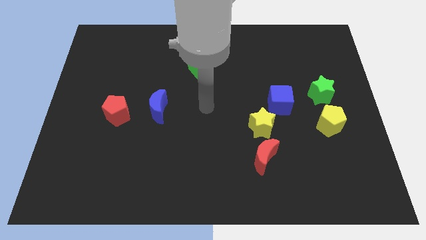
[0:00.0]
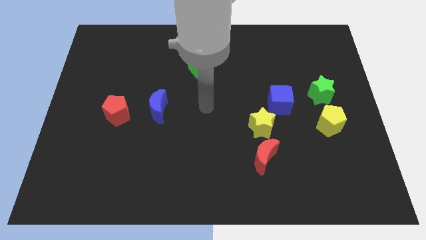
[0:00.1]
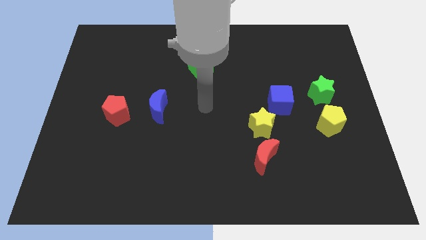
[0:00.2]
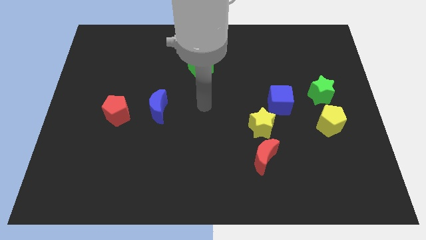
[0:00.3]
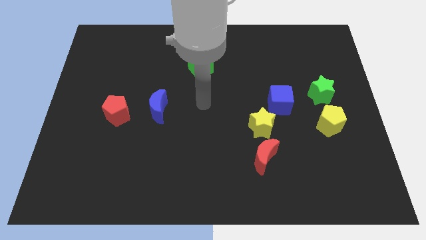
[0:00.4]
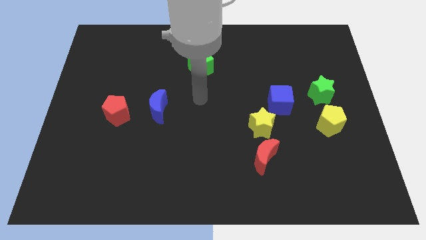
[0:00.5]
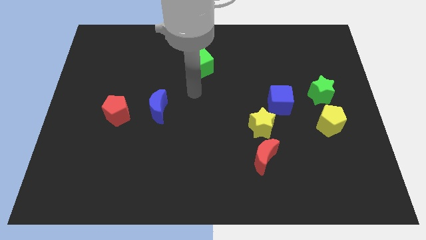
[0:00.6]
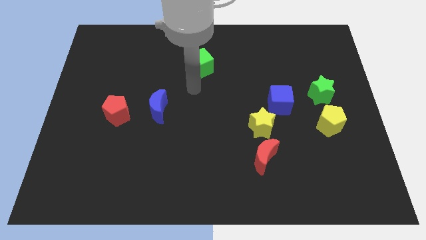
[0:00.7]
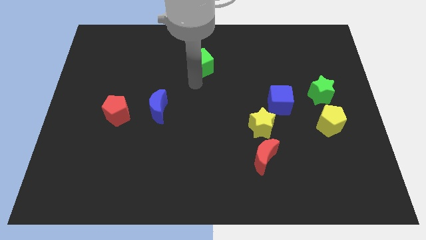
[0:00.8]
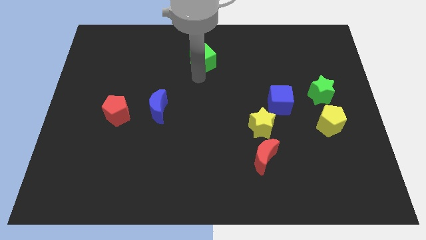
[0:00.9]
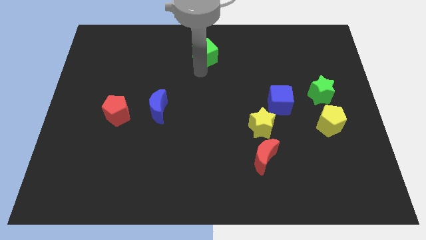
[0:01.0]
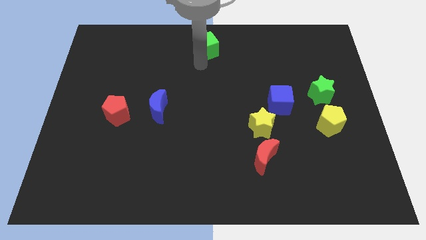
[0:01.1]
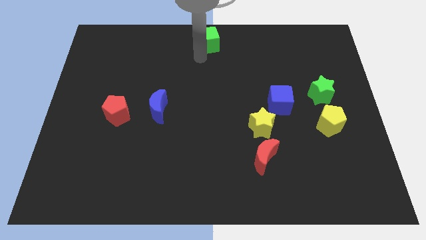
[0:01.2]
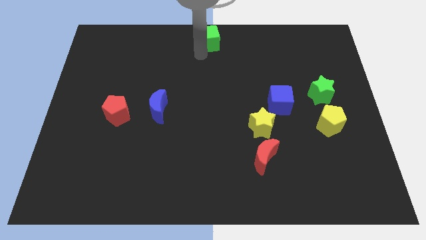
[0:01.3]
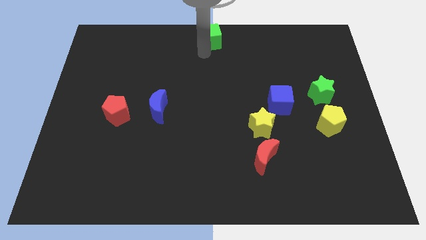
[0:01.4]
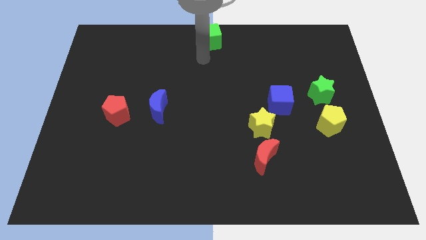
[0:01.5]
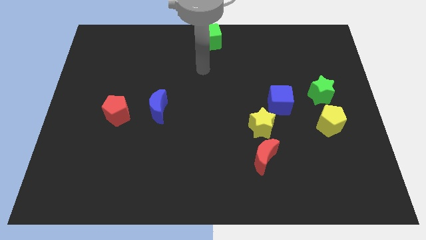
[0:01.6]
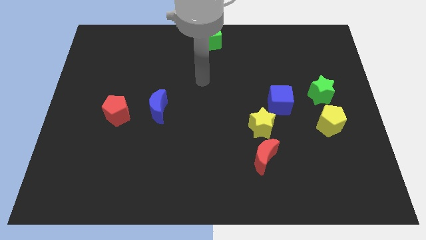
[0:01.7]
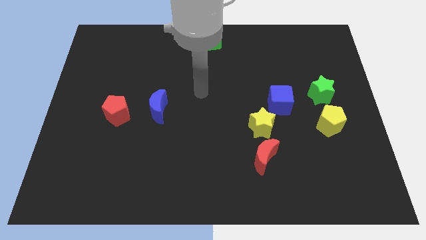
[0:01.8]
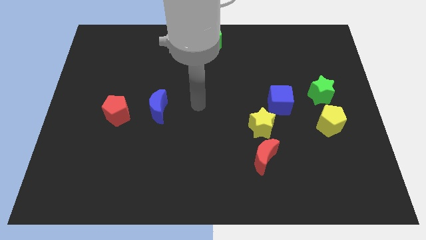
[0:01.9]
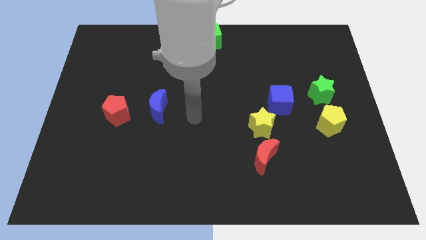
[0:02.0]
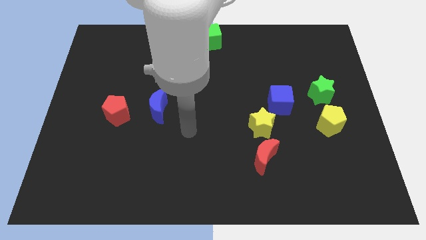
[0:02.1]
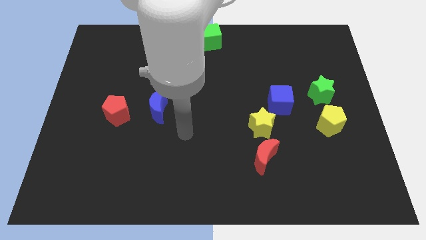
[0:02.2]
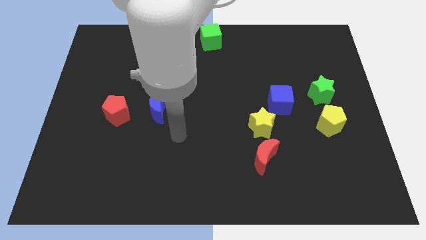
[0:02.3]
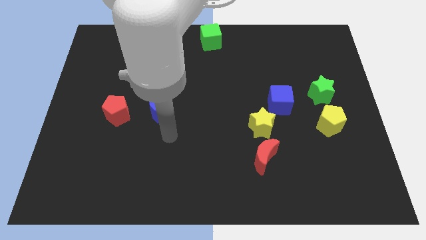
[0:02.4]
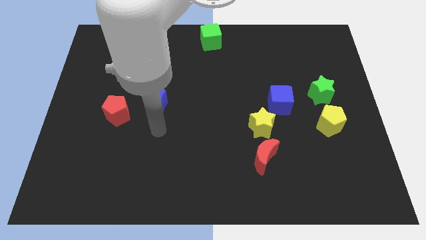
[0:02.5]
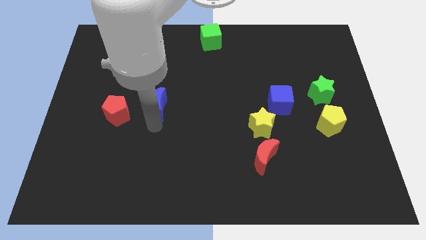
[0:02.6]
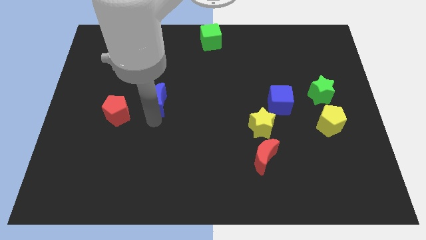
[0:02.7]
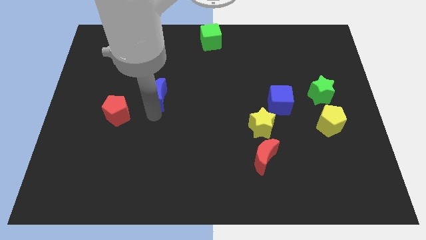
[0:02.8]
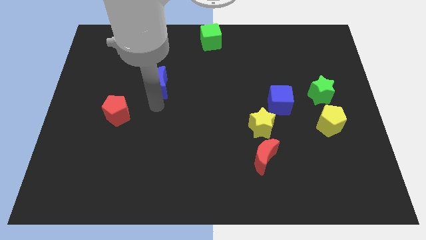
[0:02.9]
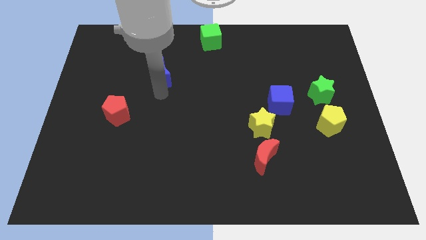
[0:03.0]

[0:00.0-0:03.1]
move the green cube to the top center of the board

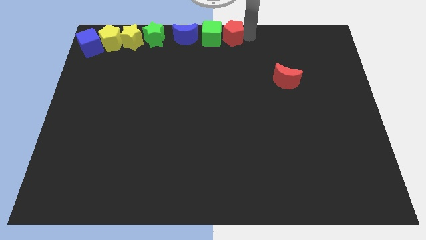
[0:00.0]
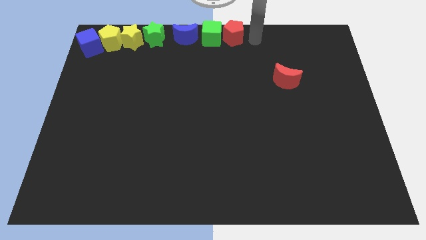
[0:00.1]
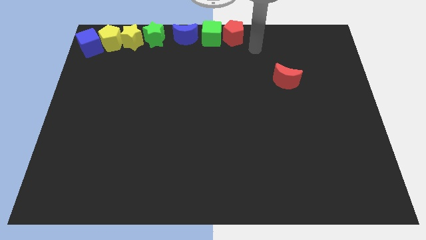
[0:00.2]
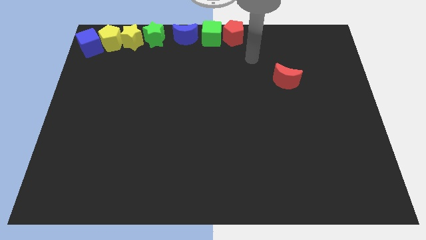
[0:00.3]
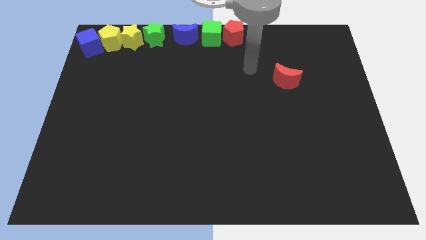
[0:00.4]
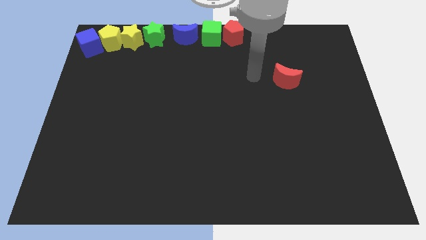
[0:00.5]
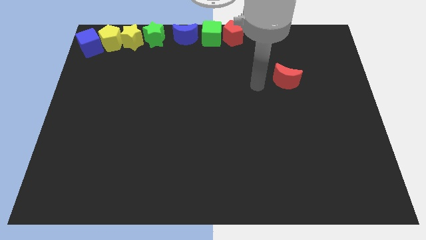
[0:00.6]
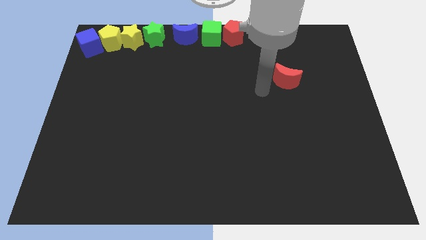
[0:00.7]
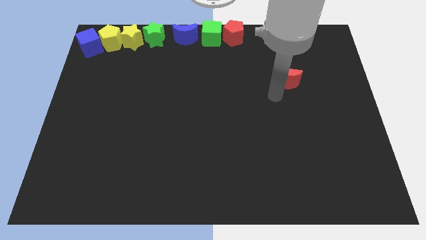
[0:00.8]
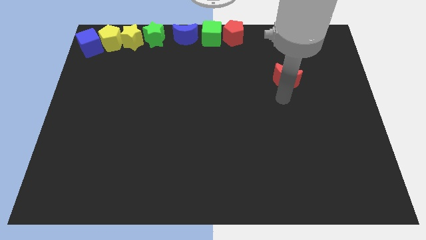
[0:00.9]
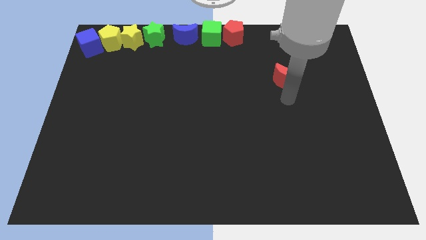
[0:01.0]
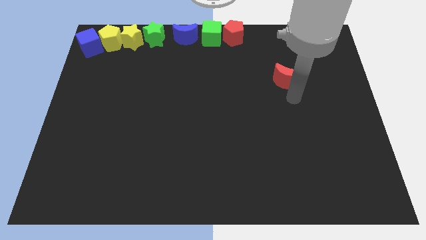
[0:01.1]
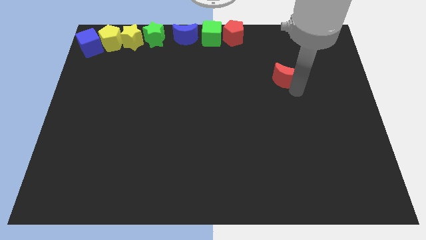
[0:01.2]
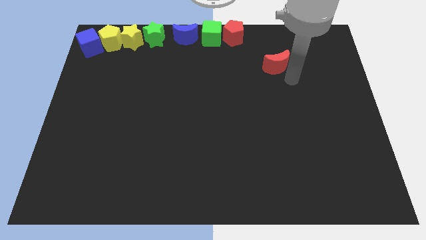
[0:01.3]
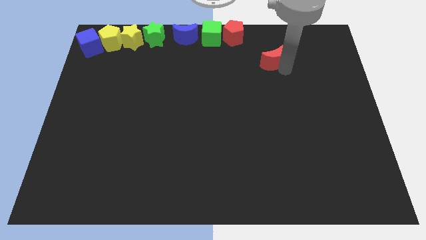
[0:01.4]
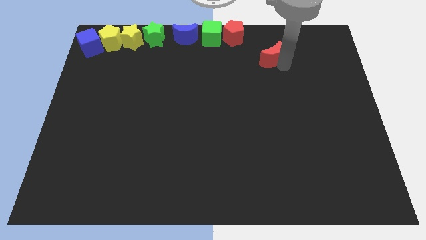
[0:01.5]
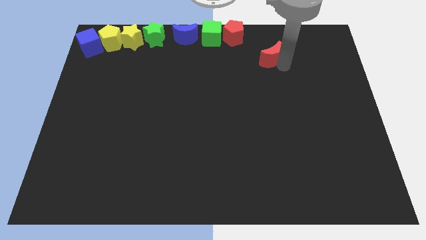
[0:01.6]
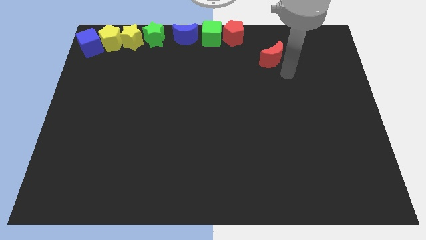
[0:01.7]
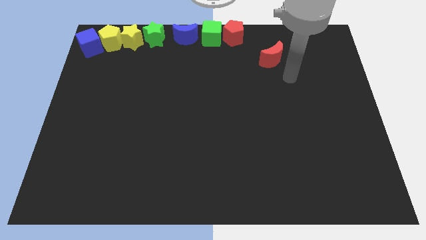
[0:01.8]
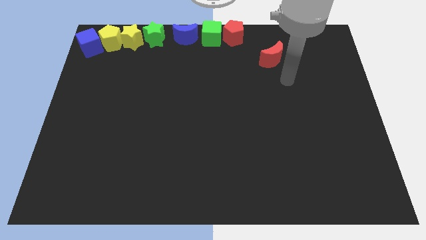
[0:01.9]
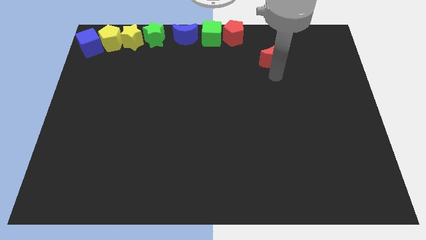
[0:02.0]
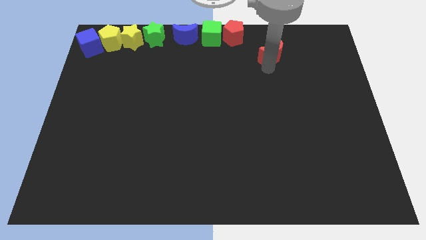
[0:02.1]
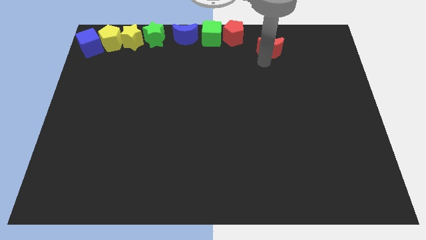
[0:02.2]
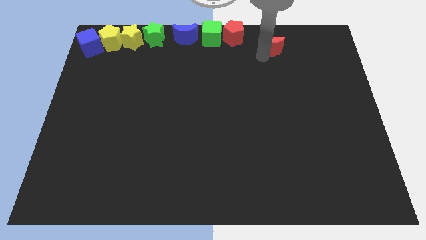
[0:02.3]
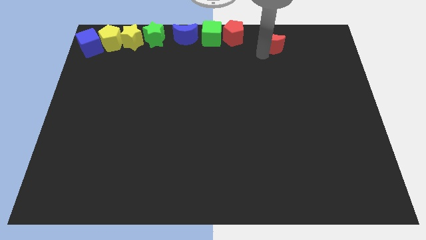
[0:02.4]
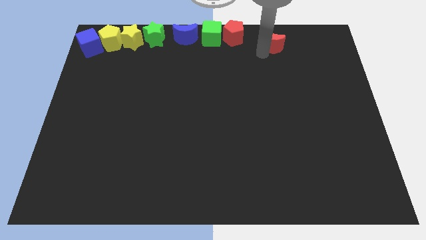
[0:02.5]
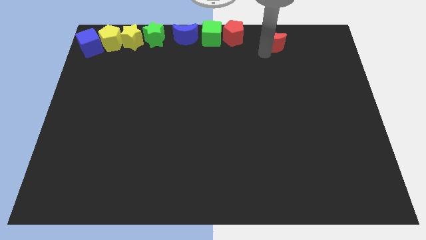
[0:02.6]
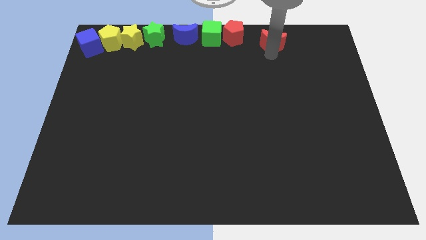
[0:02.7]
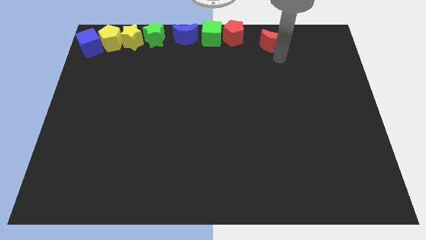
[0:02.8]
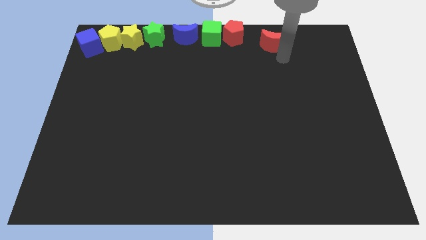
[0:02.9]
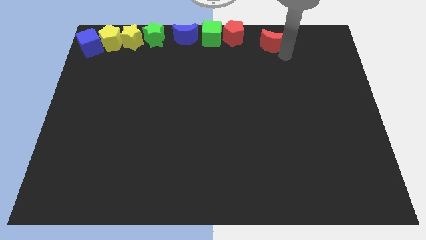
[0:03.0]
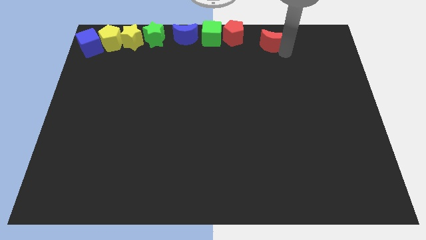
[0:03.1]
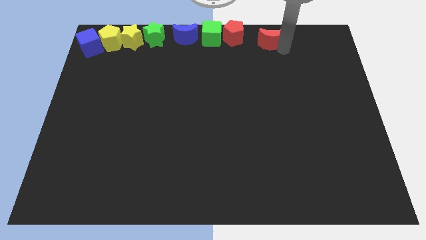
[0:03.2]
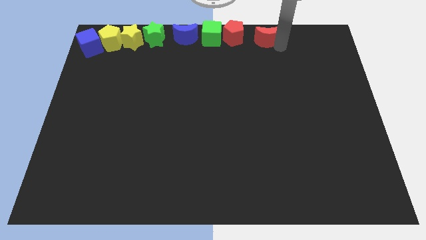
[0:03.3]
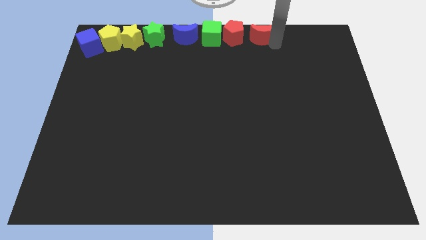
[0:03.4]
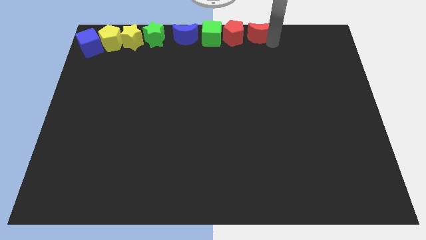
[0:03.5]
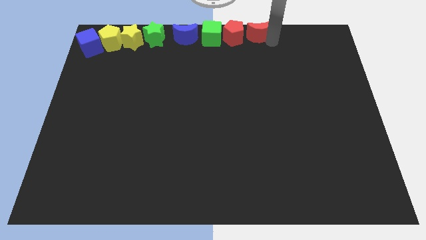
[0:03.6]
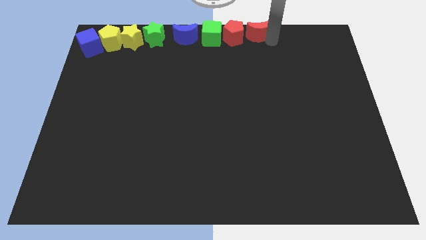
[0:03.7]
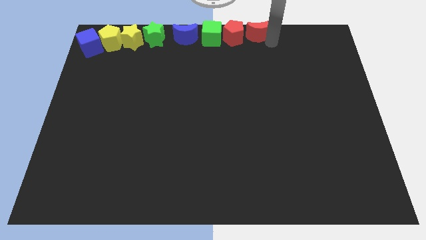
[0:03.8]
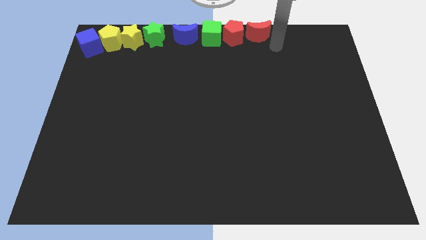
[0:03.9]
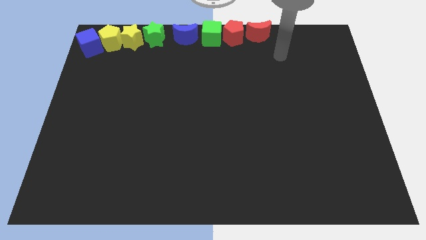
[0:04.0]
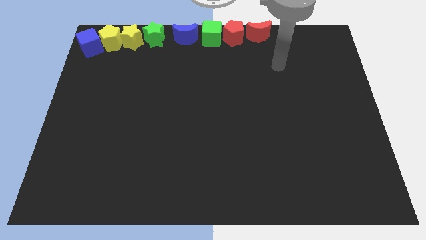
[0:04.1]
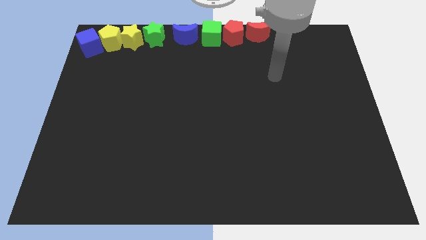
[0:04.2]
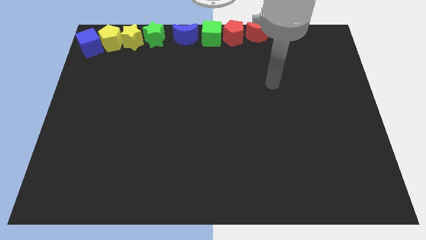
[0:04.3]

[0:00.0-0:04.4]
place the red crescent to the right of the red pentagon

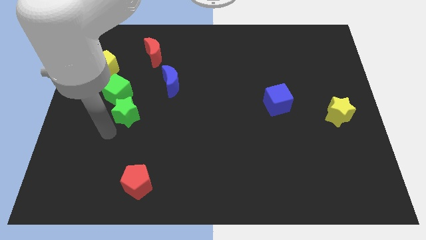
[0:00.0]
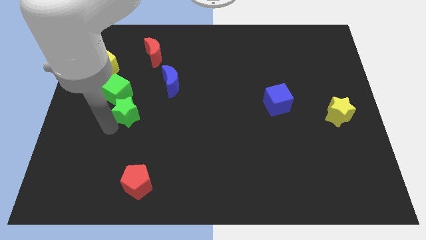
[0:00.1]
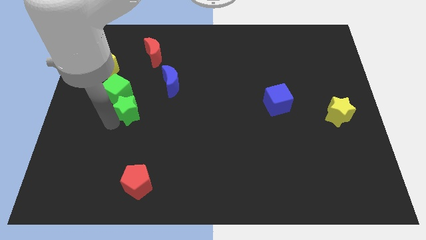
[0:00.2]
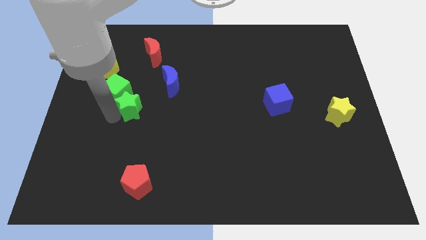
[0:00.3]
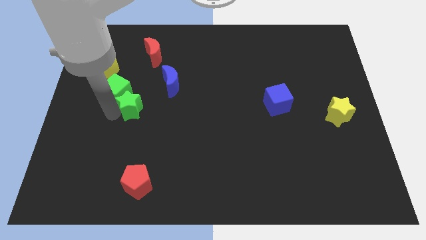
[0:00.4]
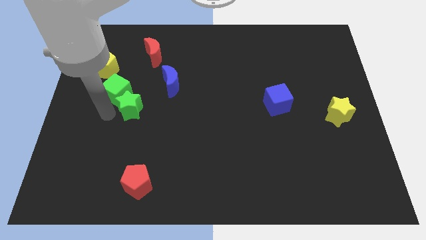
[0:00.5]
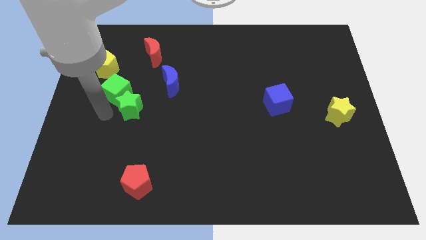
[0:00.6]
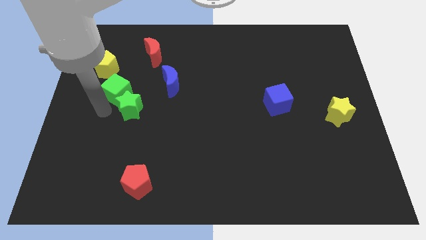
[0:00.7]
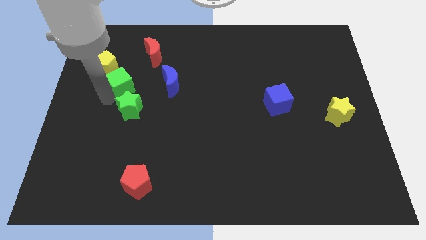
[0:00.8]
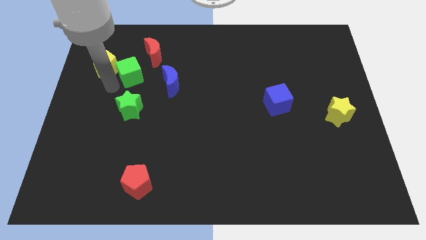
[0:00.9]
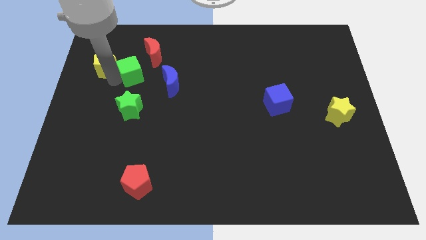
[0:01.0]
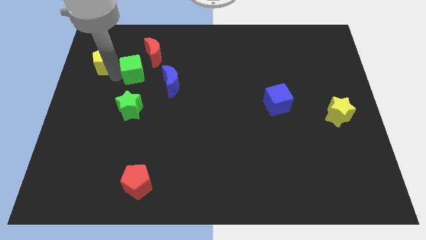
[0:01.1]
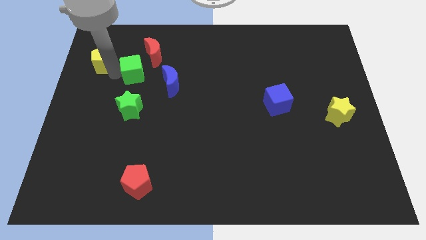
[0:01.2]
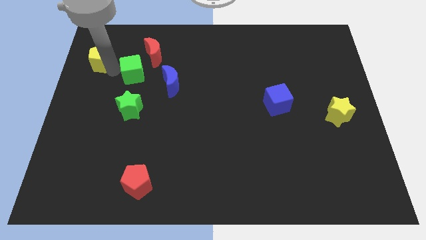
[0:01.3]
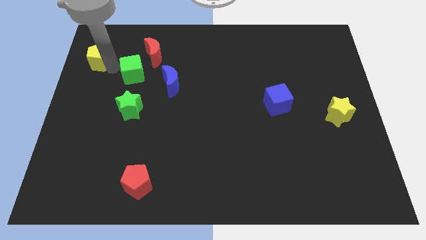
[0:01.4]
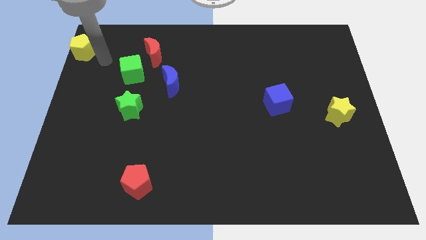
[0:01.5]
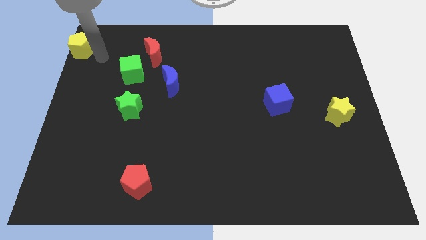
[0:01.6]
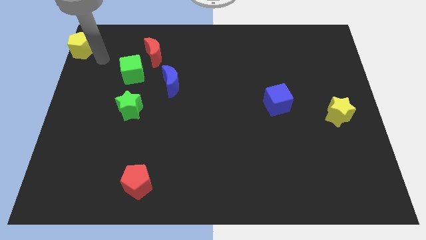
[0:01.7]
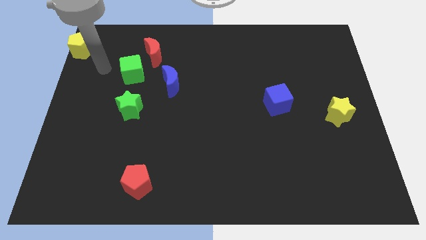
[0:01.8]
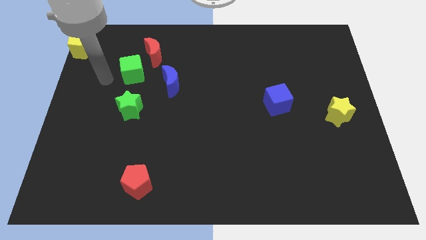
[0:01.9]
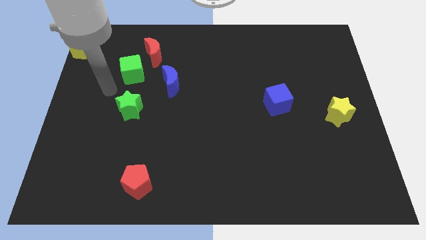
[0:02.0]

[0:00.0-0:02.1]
move the yellow pentagon to the top left corner of the board
